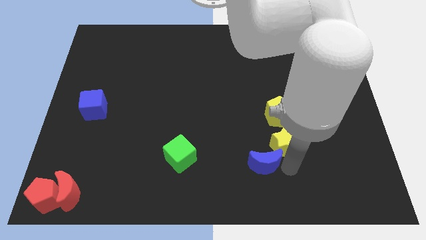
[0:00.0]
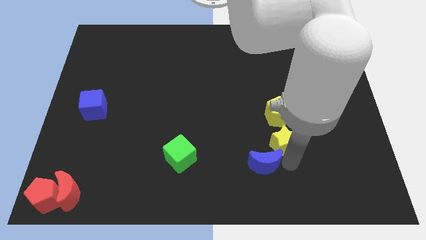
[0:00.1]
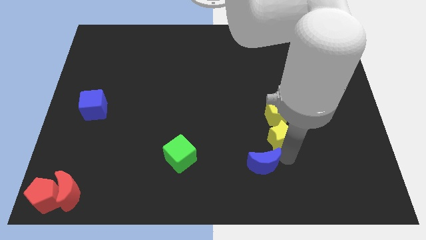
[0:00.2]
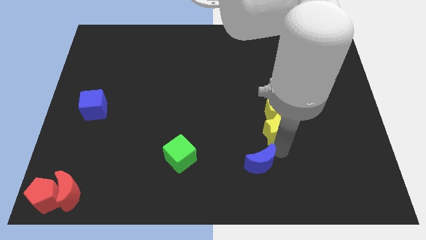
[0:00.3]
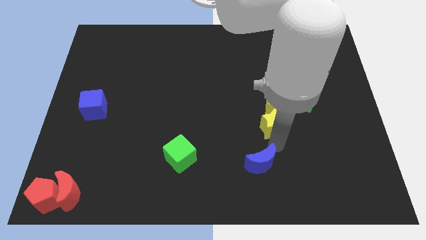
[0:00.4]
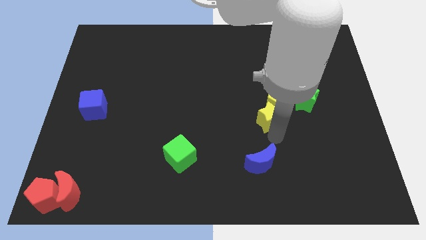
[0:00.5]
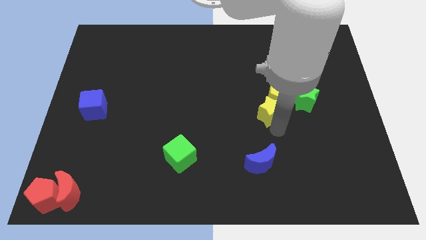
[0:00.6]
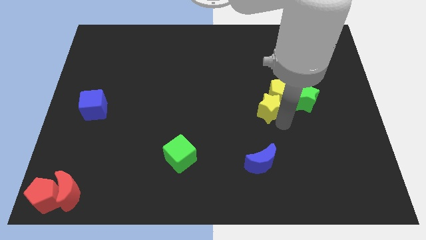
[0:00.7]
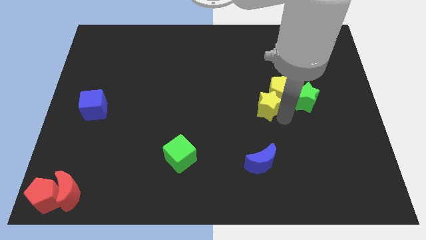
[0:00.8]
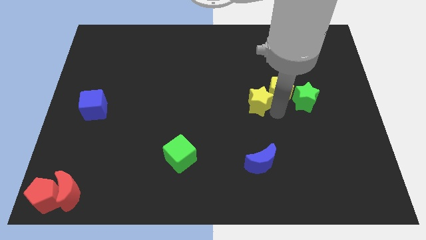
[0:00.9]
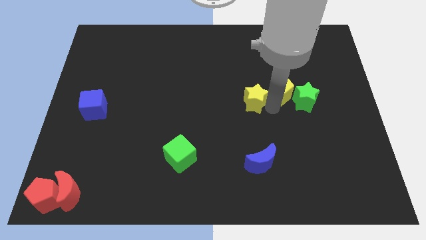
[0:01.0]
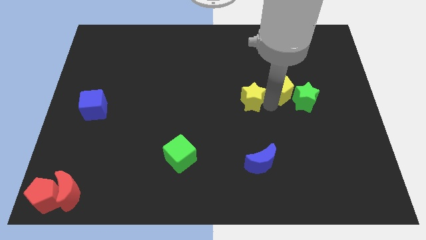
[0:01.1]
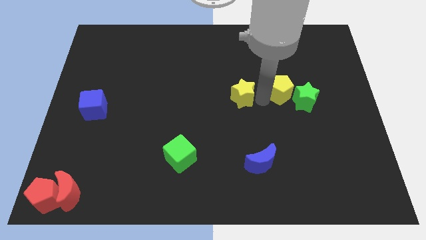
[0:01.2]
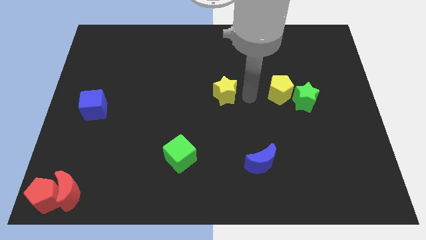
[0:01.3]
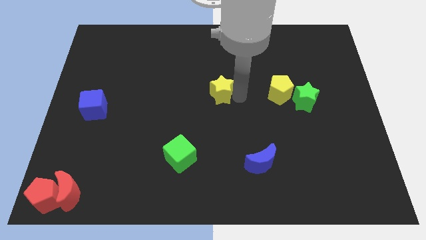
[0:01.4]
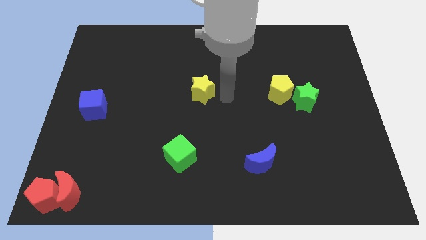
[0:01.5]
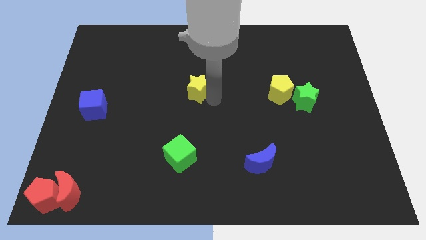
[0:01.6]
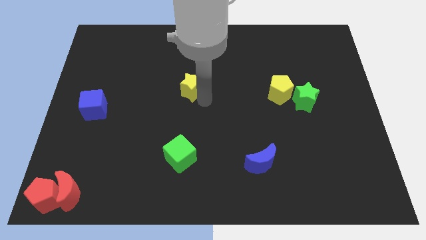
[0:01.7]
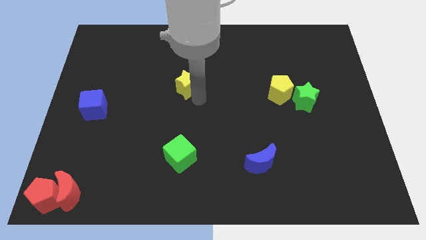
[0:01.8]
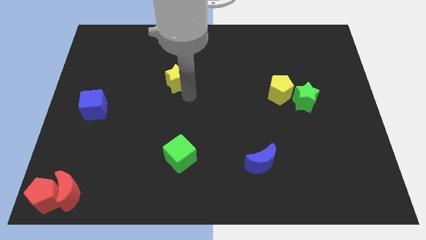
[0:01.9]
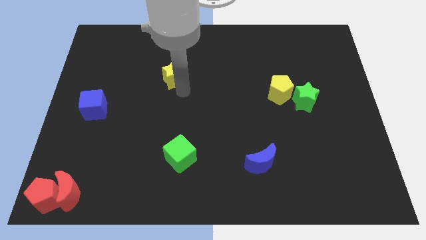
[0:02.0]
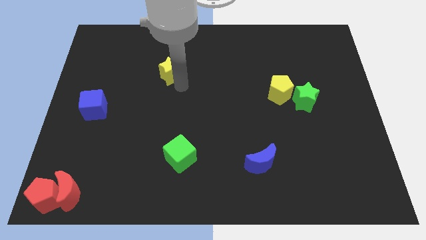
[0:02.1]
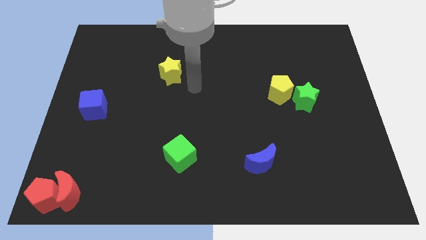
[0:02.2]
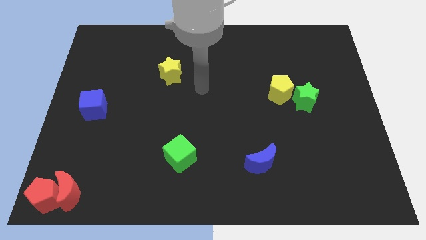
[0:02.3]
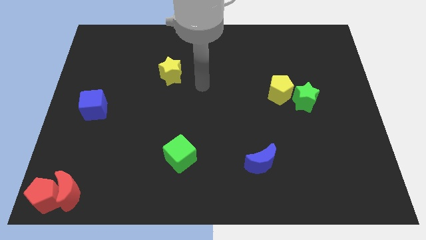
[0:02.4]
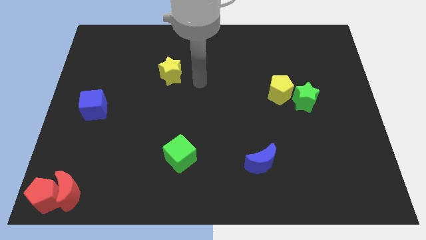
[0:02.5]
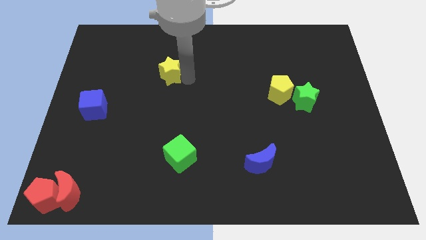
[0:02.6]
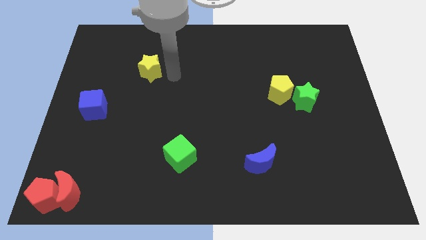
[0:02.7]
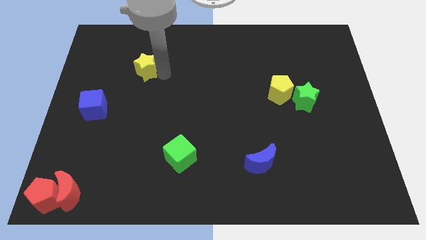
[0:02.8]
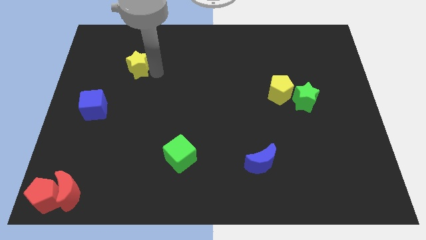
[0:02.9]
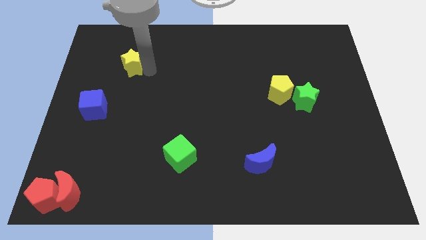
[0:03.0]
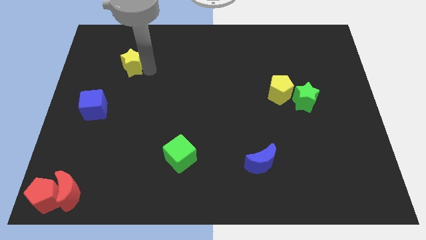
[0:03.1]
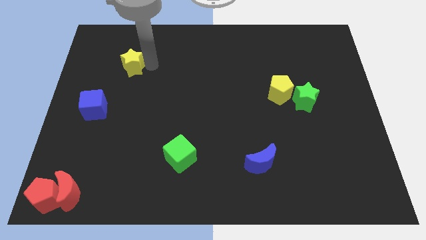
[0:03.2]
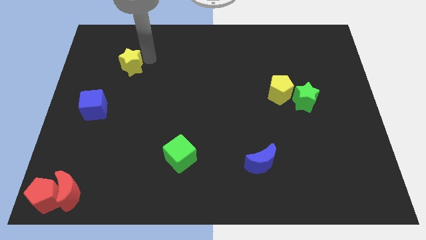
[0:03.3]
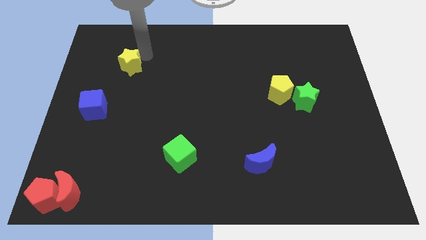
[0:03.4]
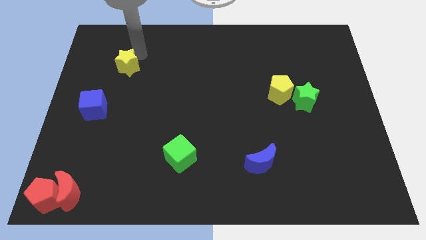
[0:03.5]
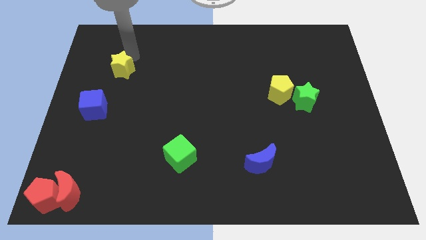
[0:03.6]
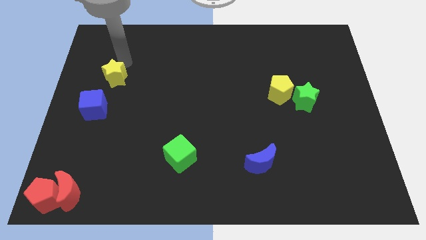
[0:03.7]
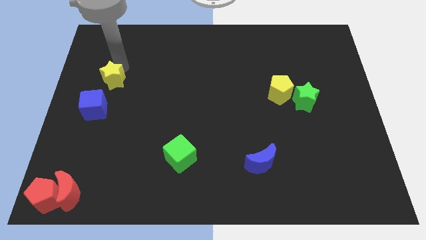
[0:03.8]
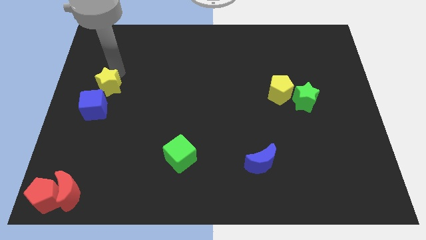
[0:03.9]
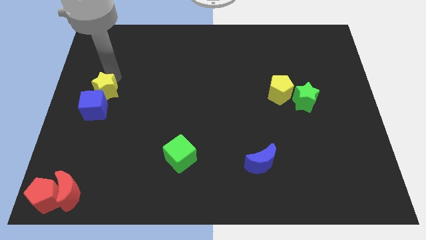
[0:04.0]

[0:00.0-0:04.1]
move the yellow star to the top right to the blue cube

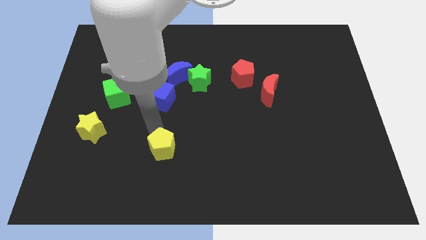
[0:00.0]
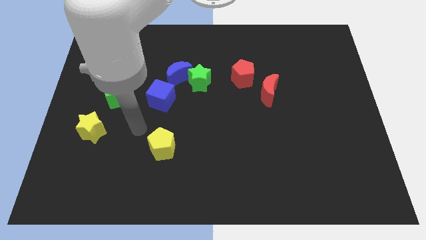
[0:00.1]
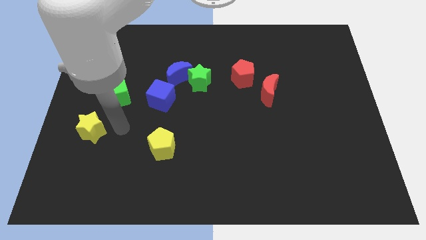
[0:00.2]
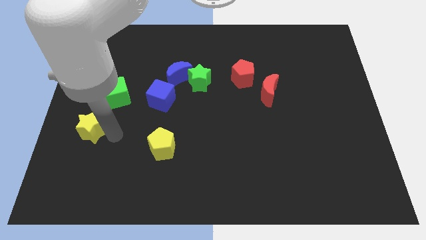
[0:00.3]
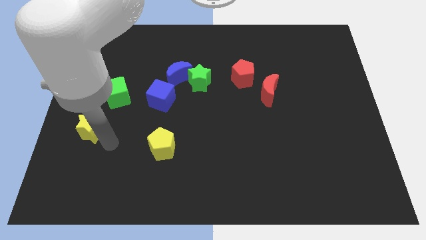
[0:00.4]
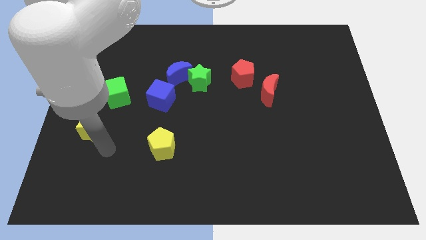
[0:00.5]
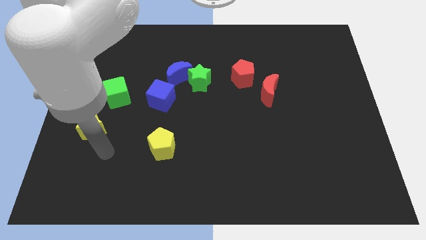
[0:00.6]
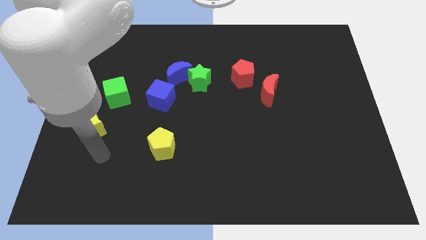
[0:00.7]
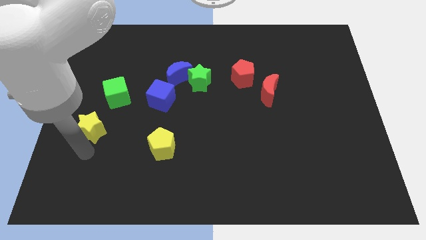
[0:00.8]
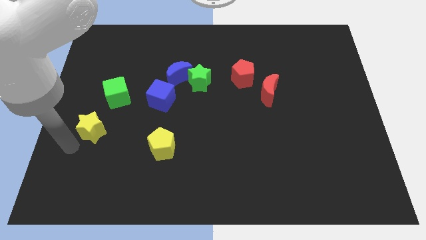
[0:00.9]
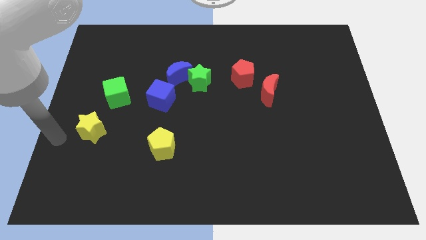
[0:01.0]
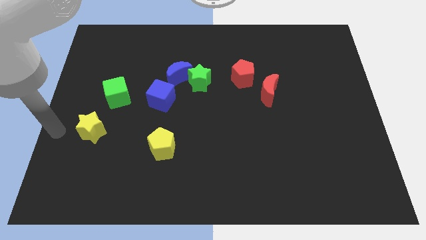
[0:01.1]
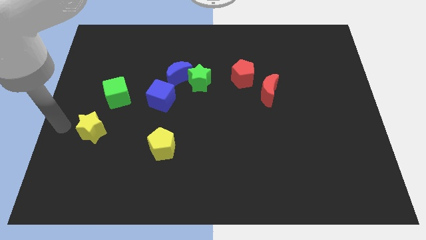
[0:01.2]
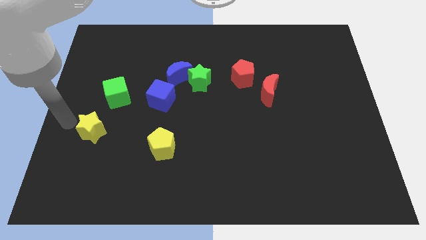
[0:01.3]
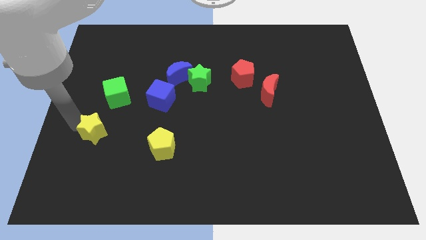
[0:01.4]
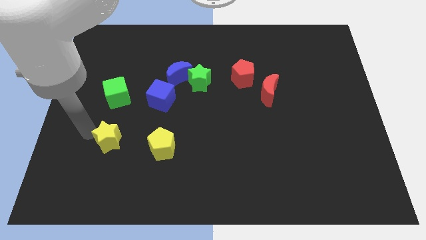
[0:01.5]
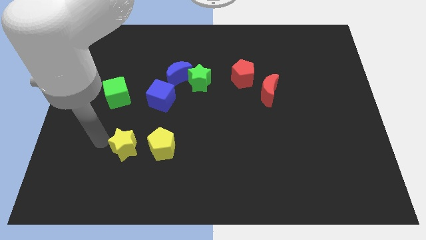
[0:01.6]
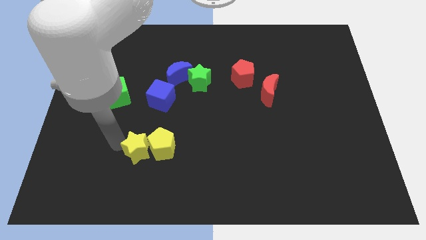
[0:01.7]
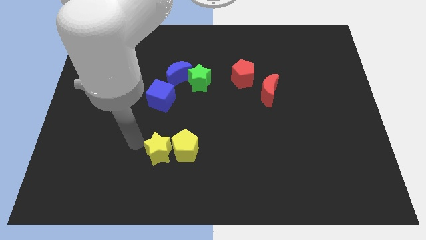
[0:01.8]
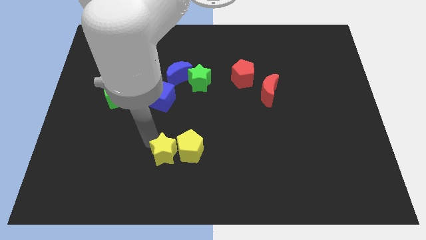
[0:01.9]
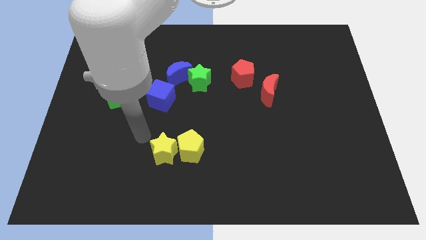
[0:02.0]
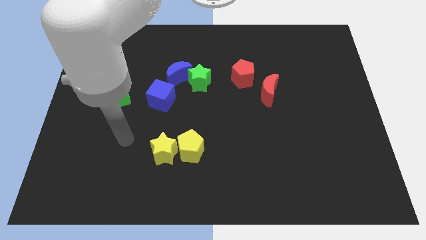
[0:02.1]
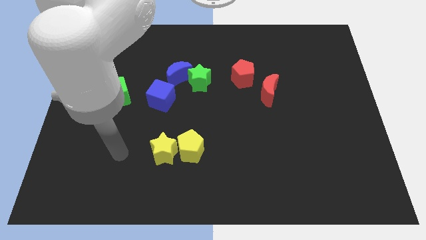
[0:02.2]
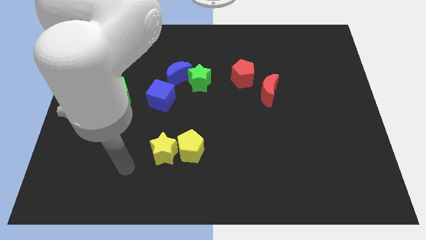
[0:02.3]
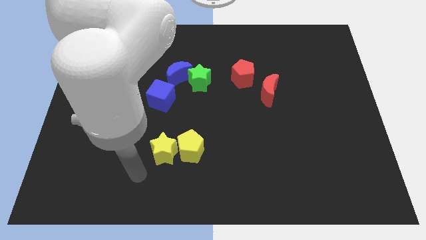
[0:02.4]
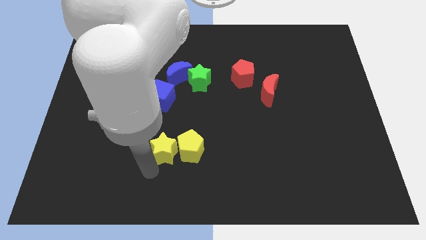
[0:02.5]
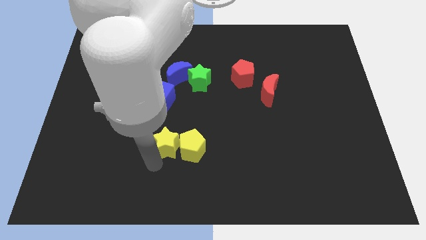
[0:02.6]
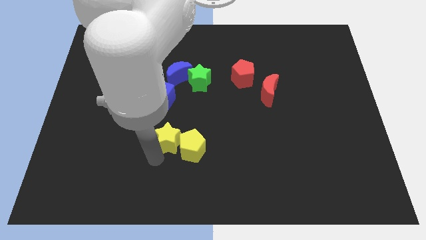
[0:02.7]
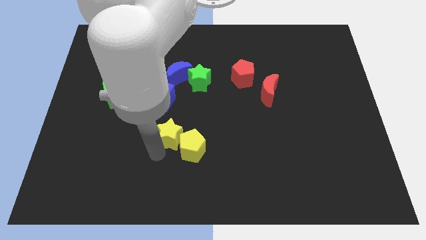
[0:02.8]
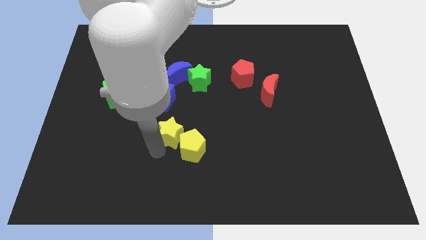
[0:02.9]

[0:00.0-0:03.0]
push the yellow star into the yellow pentagon

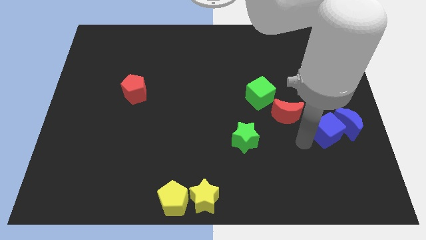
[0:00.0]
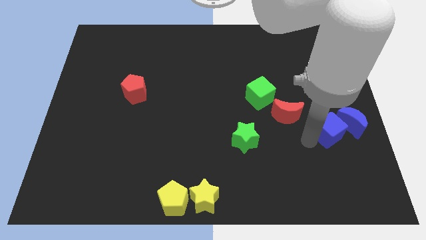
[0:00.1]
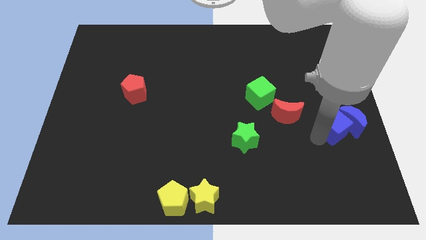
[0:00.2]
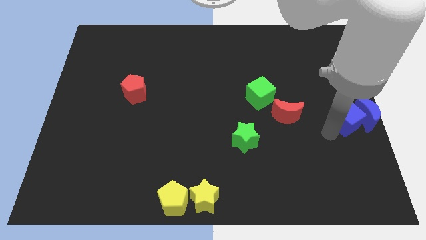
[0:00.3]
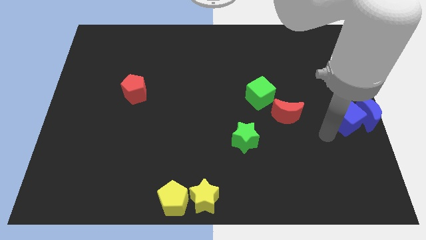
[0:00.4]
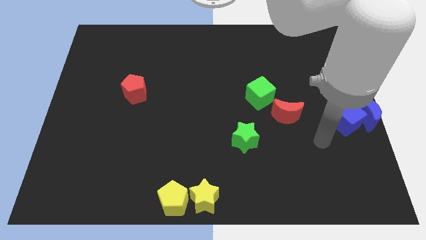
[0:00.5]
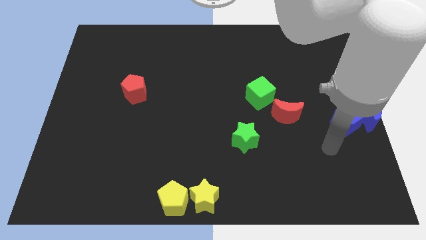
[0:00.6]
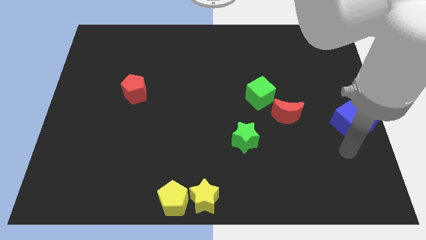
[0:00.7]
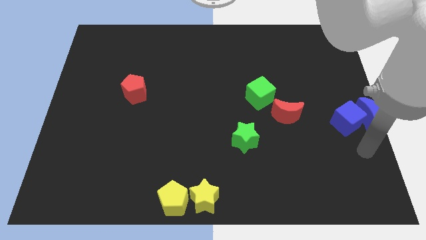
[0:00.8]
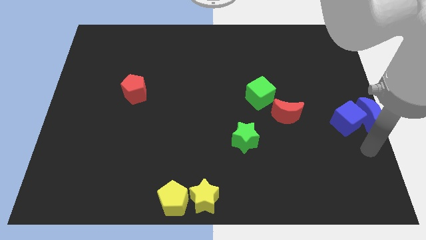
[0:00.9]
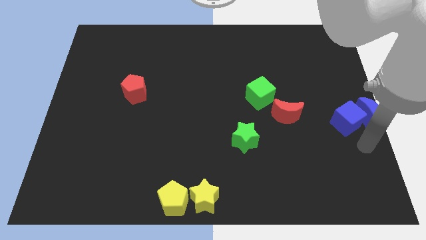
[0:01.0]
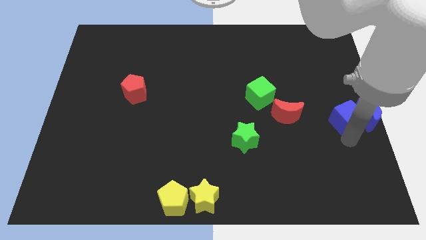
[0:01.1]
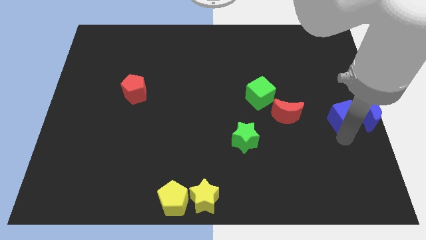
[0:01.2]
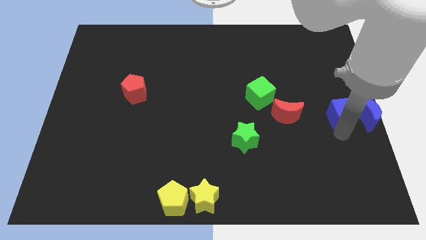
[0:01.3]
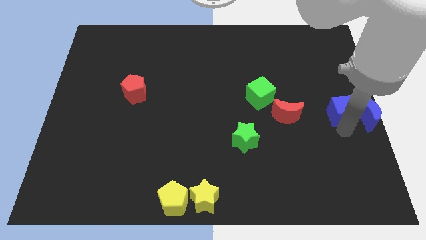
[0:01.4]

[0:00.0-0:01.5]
move the blue blocks to the center right
